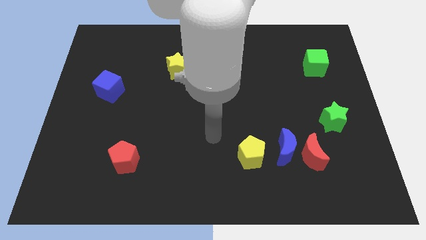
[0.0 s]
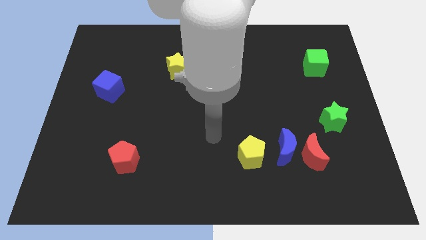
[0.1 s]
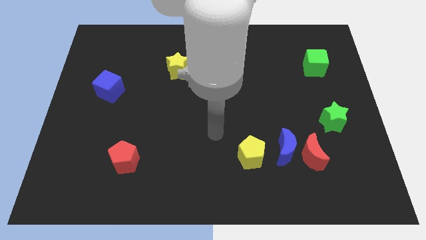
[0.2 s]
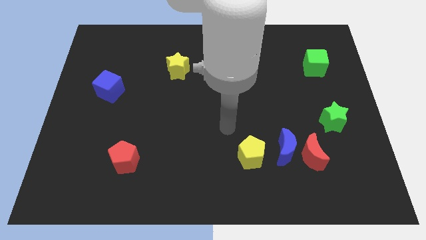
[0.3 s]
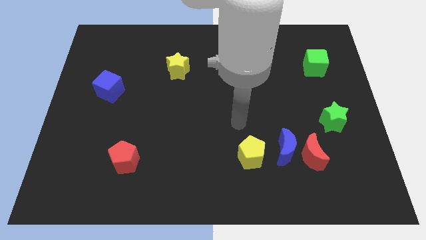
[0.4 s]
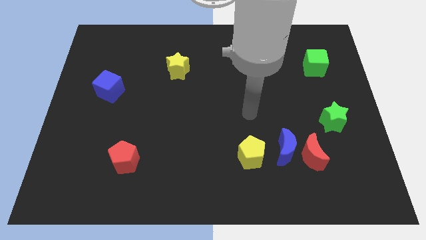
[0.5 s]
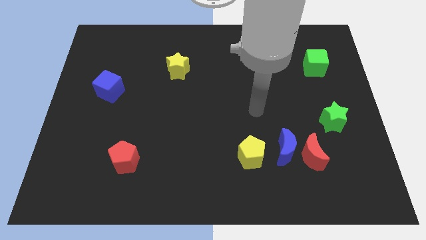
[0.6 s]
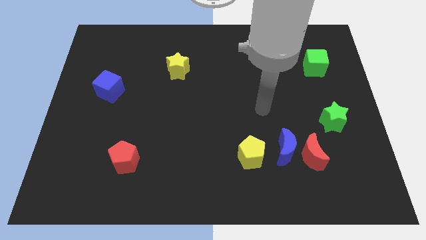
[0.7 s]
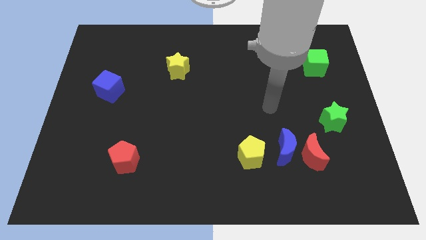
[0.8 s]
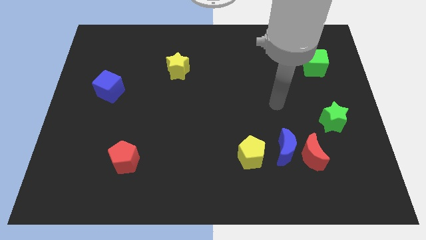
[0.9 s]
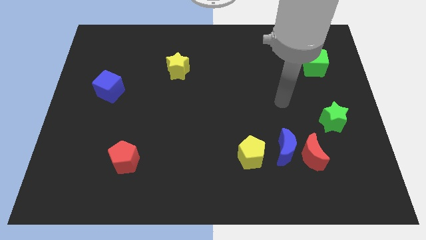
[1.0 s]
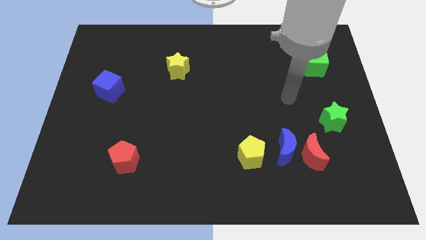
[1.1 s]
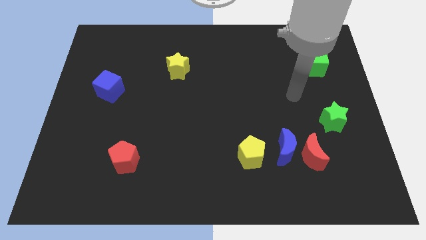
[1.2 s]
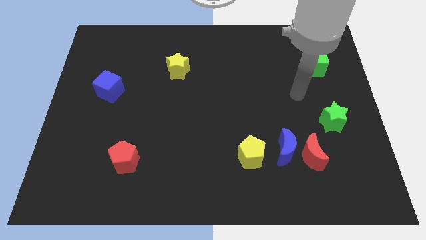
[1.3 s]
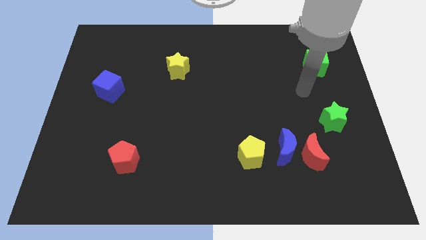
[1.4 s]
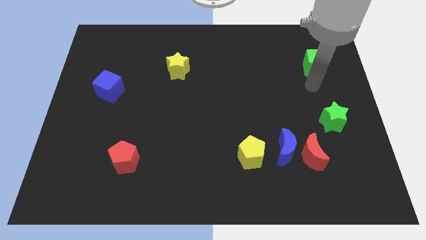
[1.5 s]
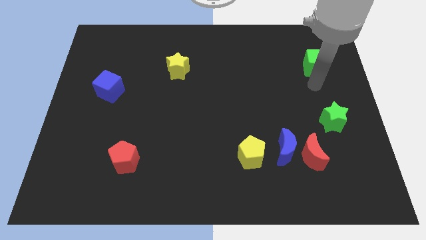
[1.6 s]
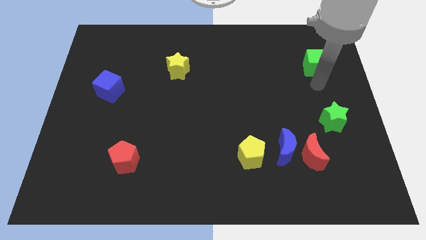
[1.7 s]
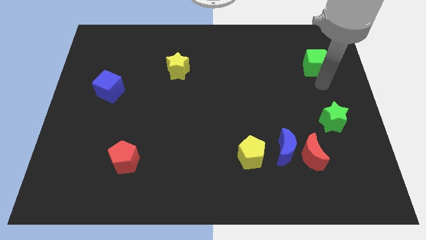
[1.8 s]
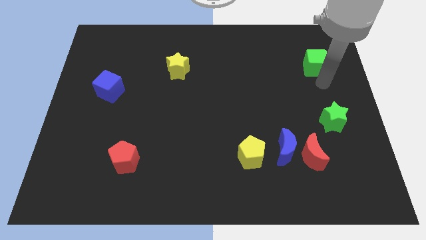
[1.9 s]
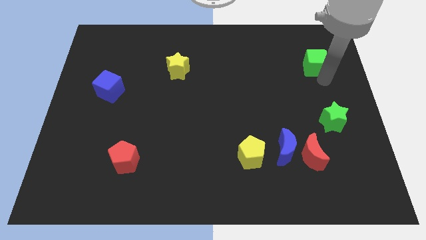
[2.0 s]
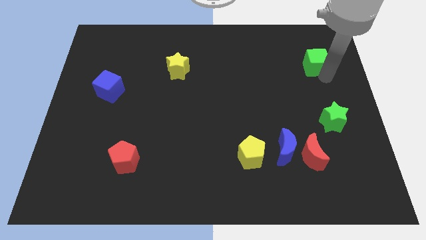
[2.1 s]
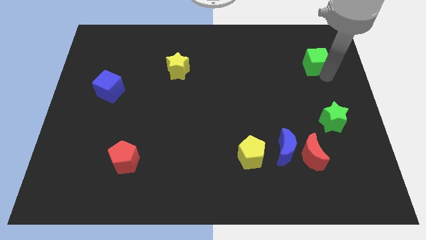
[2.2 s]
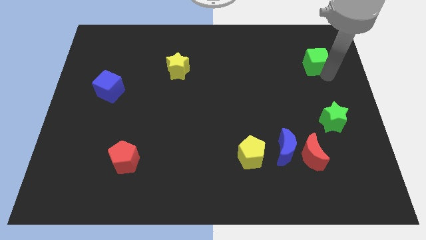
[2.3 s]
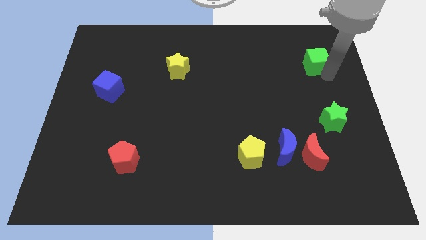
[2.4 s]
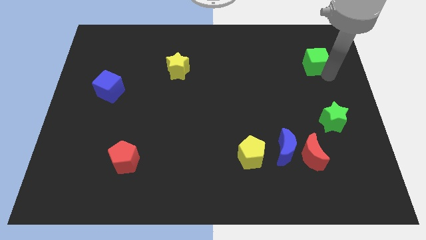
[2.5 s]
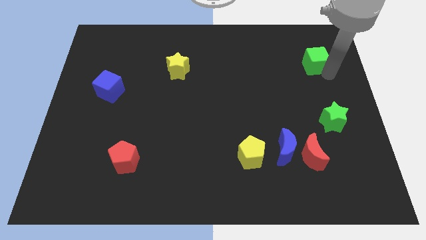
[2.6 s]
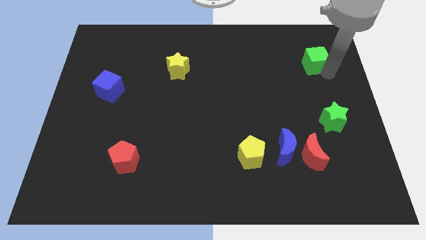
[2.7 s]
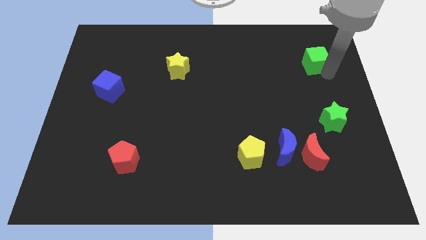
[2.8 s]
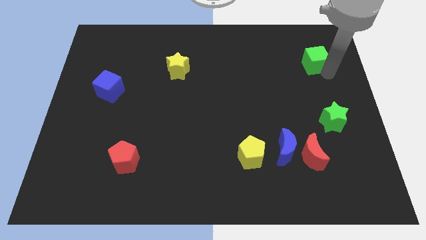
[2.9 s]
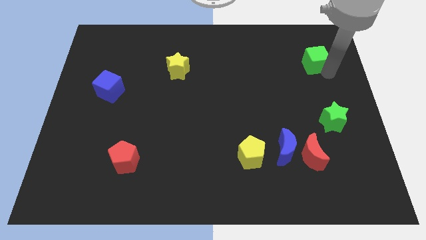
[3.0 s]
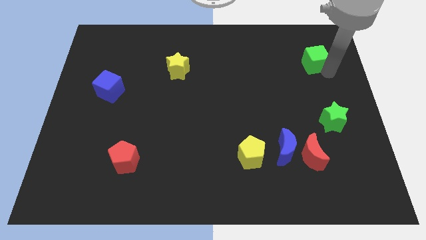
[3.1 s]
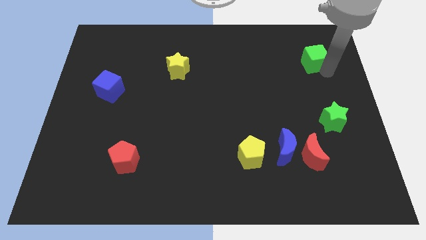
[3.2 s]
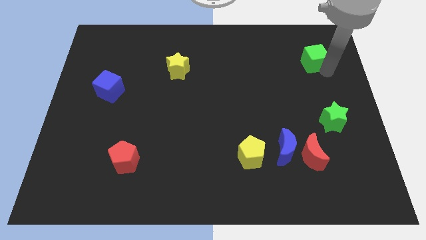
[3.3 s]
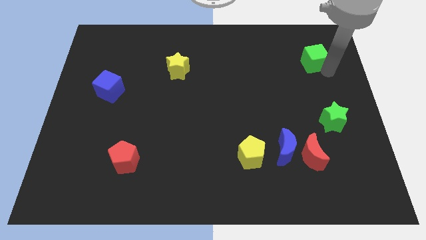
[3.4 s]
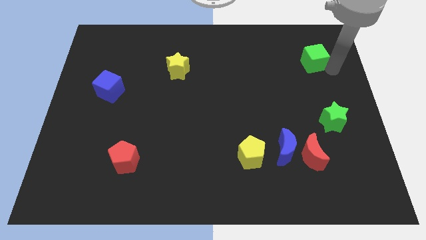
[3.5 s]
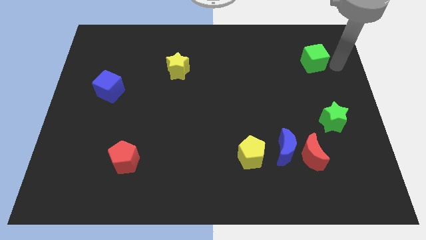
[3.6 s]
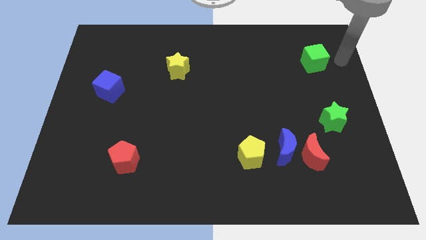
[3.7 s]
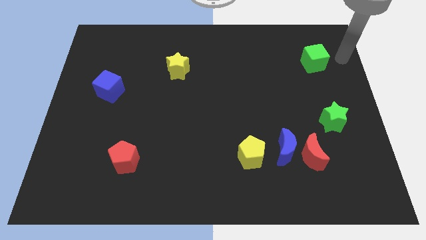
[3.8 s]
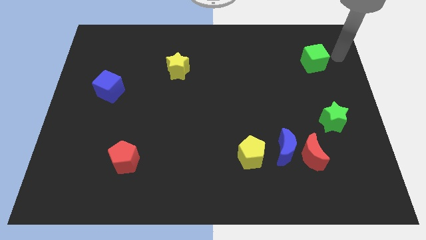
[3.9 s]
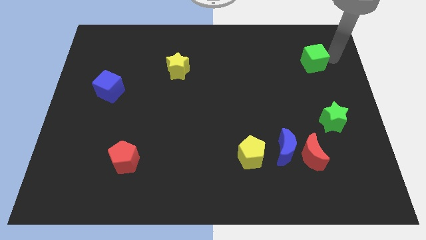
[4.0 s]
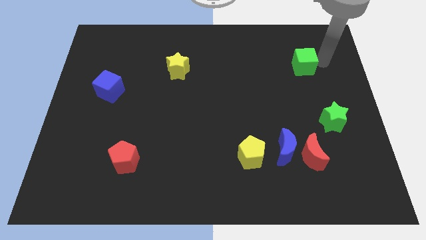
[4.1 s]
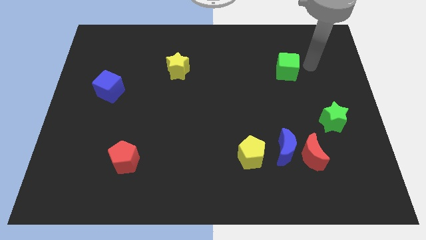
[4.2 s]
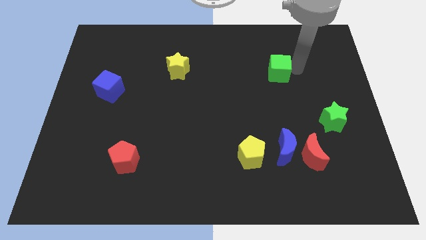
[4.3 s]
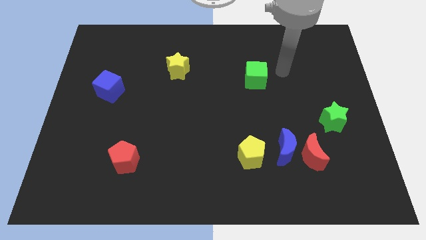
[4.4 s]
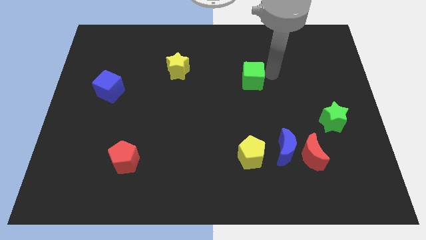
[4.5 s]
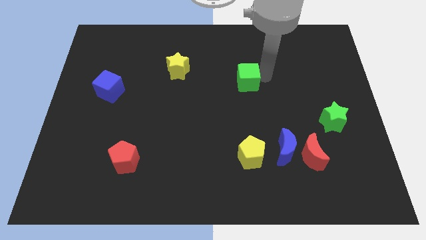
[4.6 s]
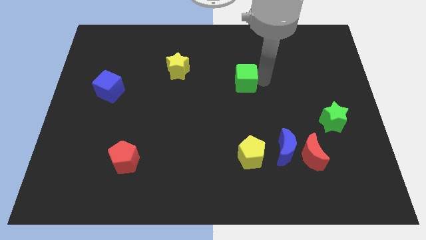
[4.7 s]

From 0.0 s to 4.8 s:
move your arm close to the green cube

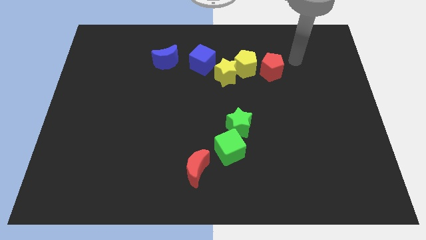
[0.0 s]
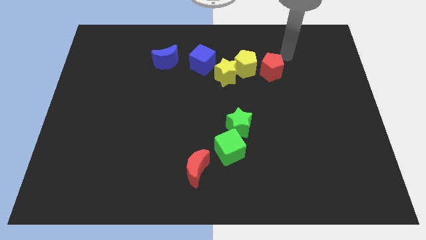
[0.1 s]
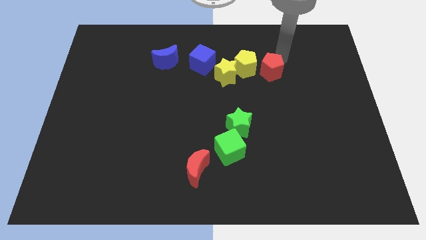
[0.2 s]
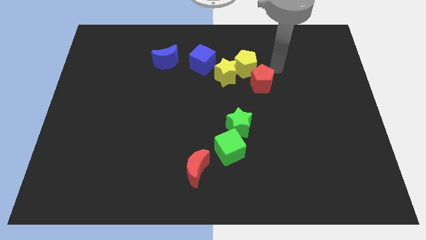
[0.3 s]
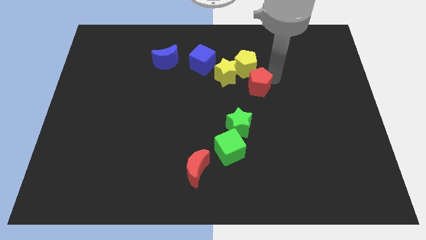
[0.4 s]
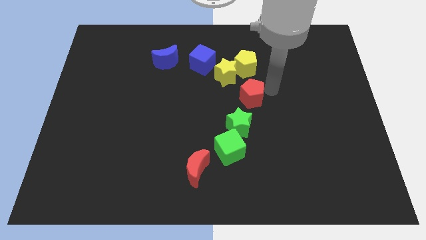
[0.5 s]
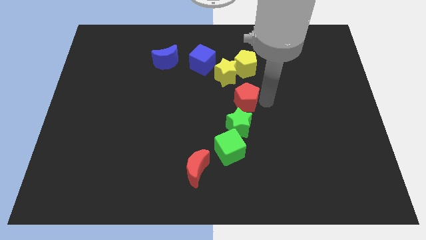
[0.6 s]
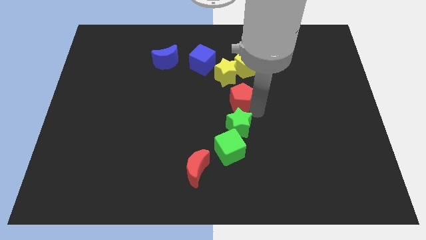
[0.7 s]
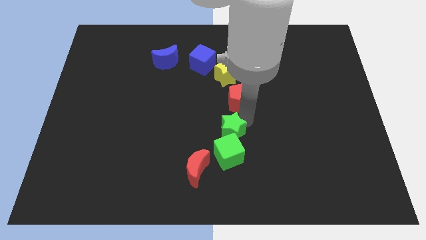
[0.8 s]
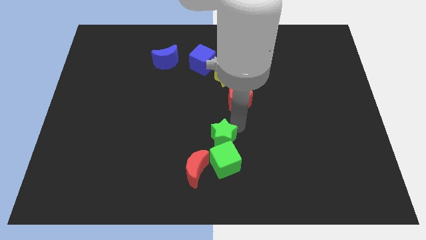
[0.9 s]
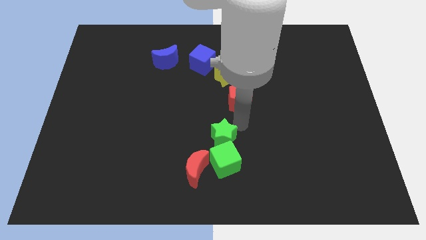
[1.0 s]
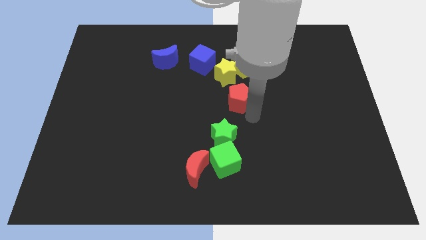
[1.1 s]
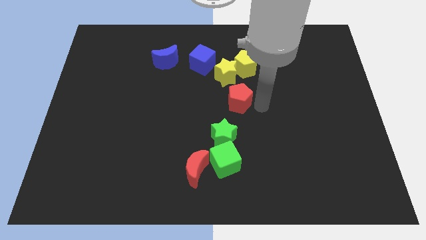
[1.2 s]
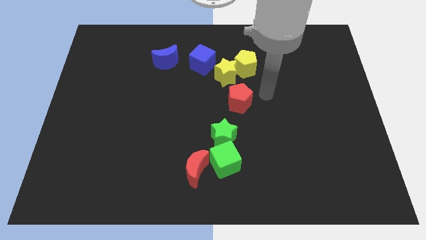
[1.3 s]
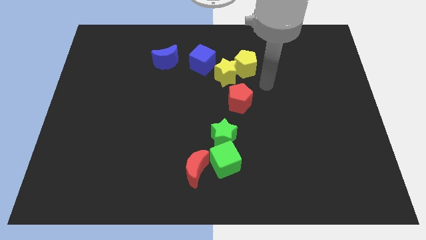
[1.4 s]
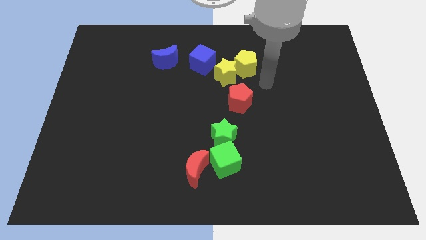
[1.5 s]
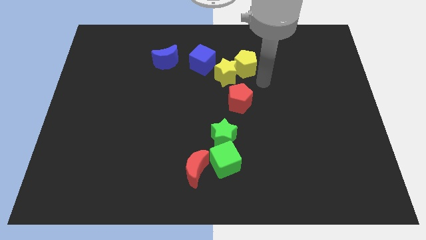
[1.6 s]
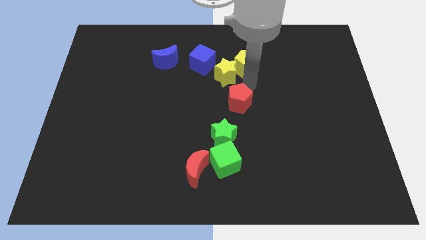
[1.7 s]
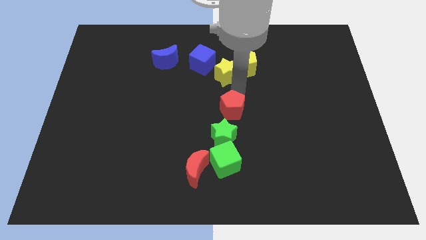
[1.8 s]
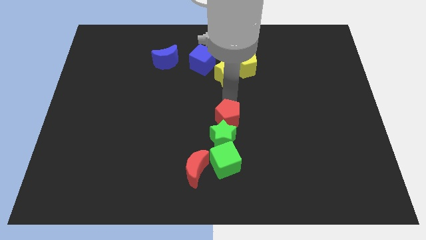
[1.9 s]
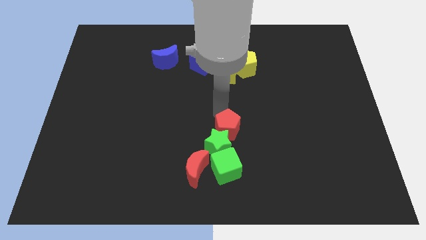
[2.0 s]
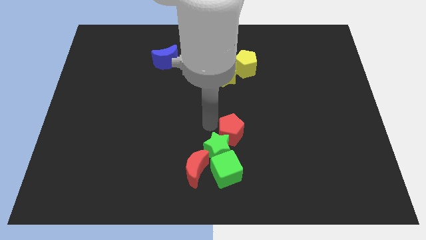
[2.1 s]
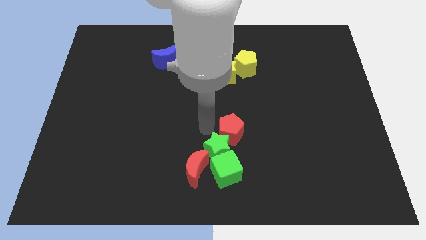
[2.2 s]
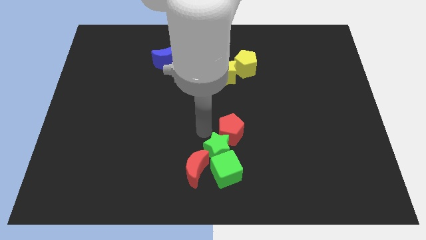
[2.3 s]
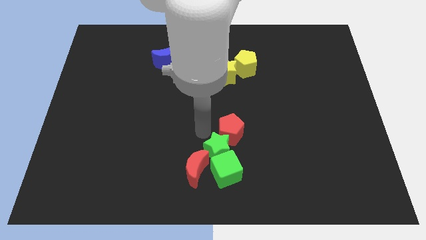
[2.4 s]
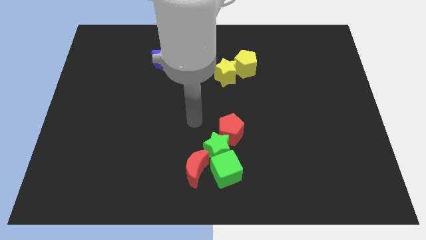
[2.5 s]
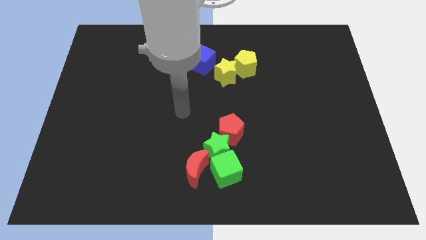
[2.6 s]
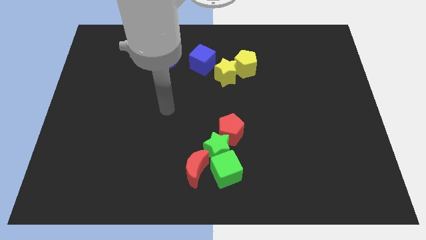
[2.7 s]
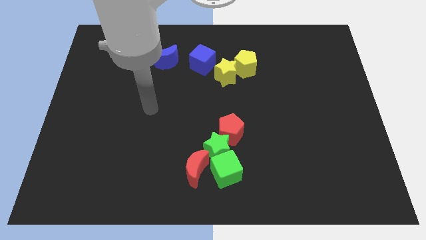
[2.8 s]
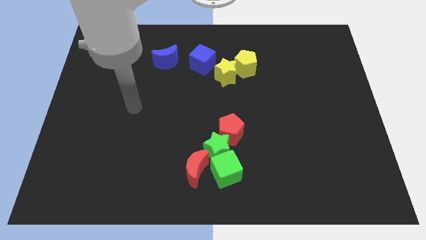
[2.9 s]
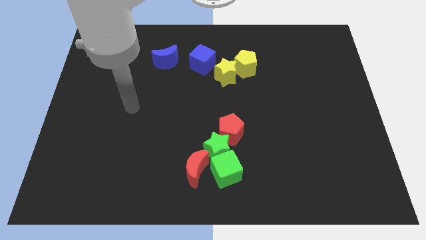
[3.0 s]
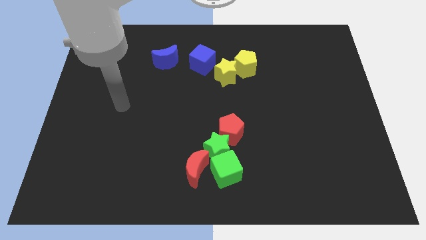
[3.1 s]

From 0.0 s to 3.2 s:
push the red pentagon into the top side of the green star

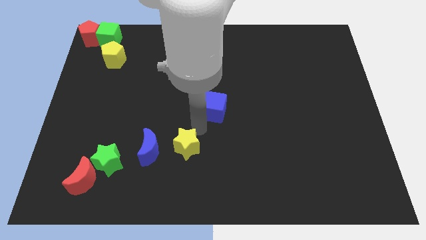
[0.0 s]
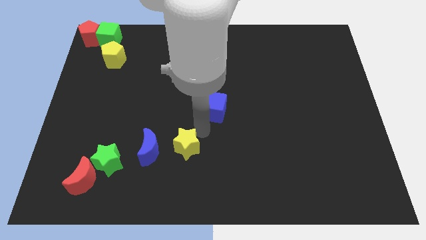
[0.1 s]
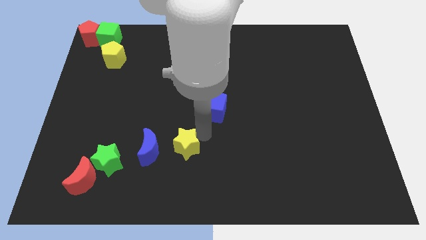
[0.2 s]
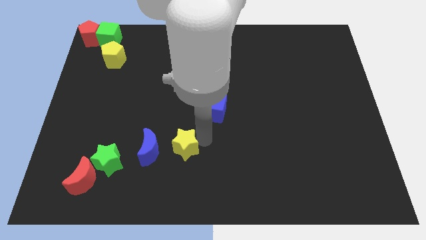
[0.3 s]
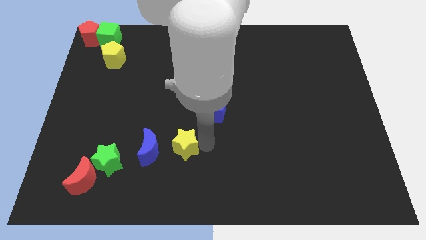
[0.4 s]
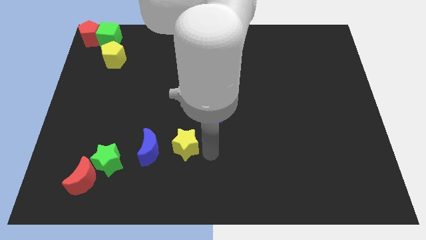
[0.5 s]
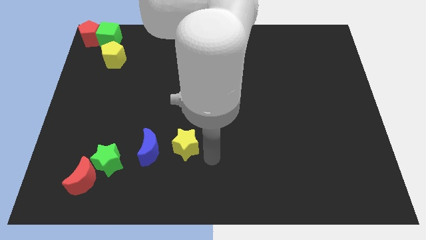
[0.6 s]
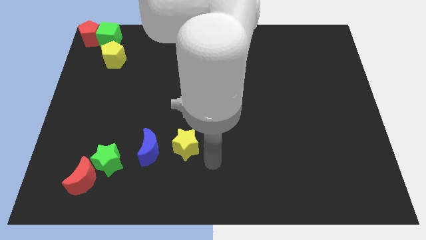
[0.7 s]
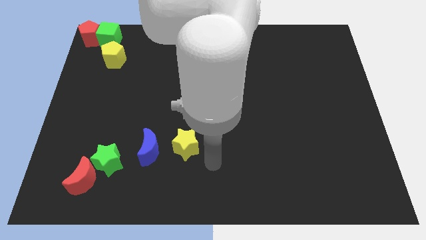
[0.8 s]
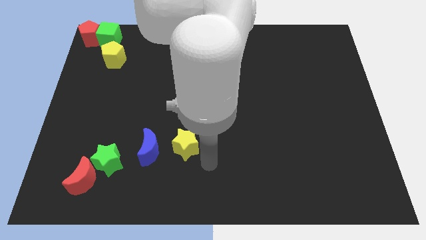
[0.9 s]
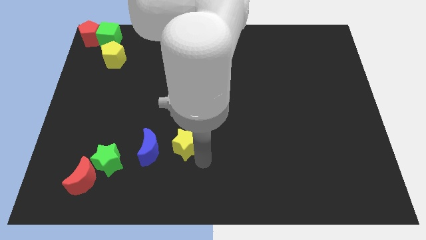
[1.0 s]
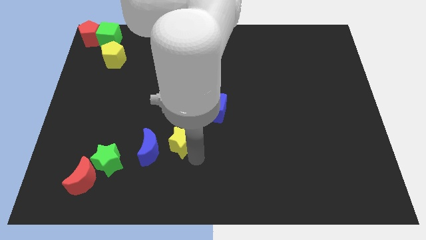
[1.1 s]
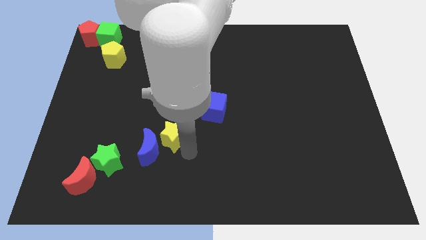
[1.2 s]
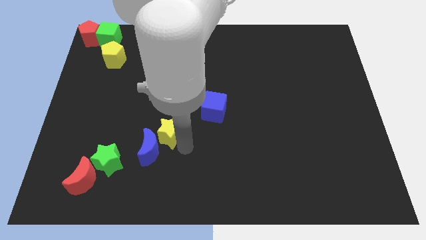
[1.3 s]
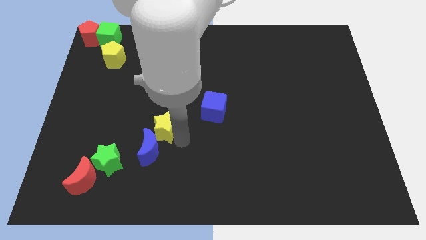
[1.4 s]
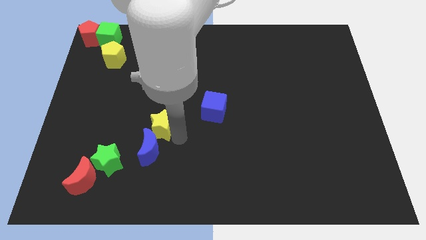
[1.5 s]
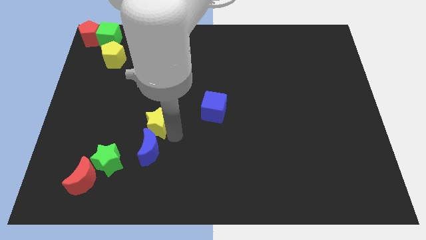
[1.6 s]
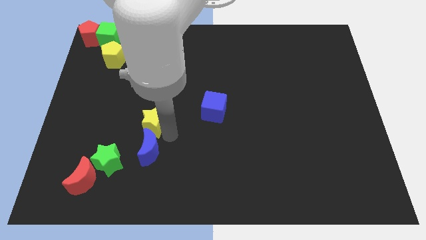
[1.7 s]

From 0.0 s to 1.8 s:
place the yellow star on top of the blue crescent
